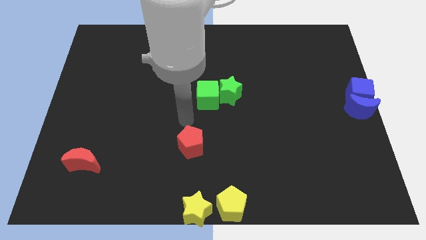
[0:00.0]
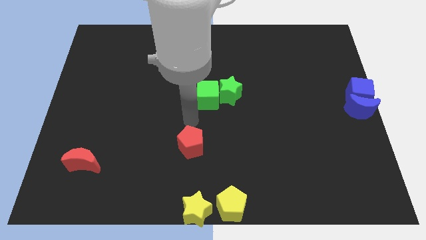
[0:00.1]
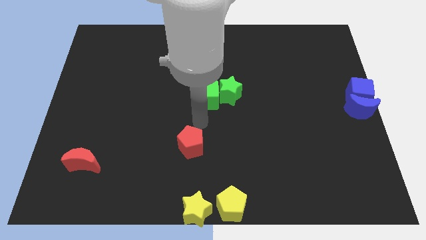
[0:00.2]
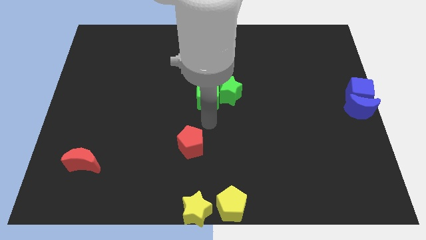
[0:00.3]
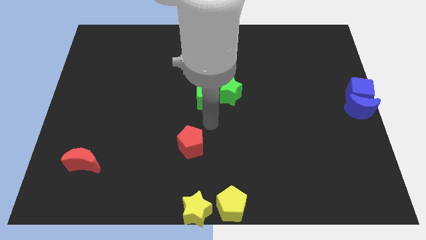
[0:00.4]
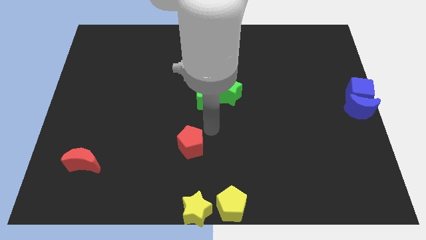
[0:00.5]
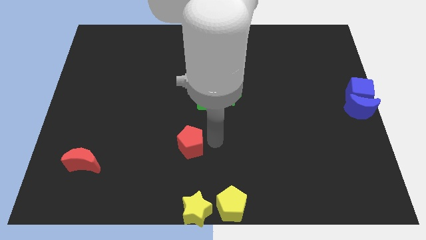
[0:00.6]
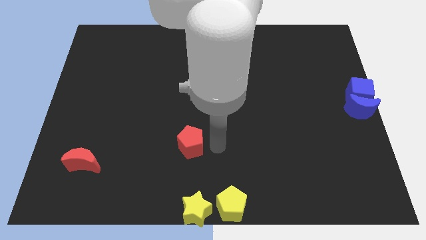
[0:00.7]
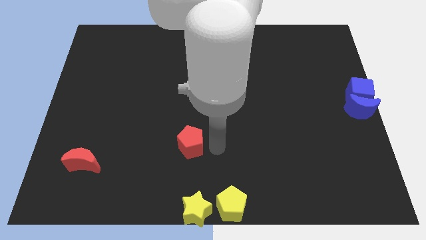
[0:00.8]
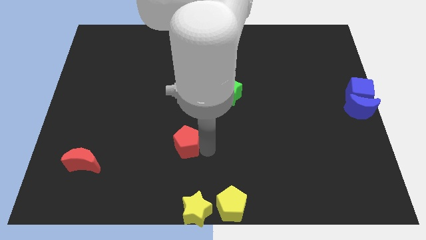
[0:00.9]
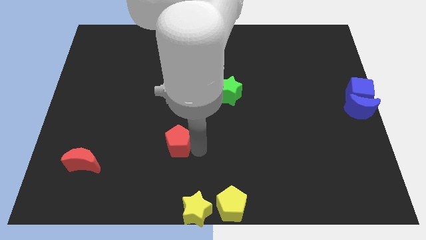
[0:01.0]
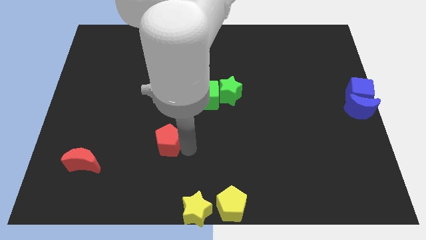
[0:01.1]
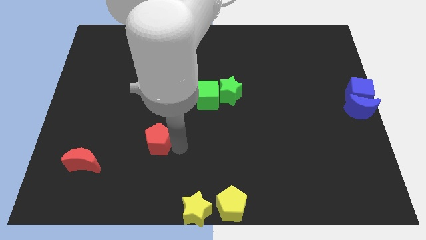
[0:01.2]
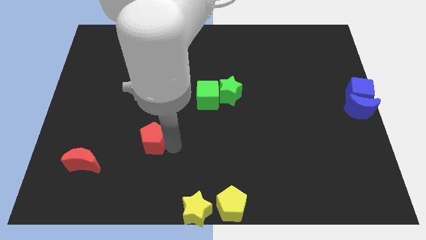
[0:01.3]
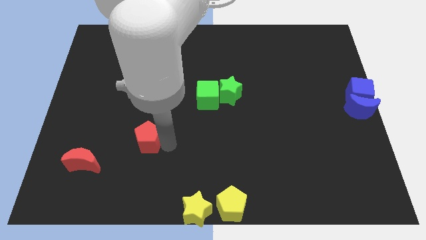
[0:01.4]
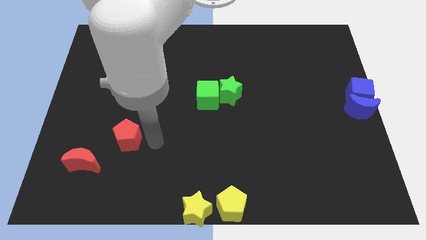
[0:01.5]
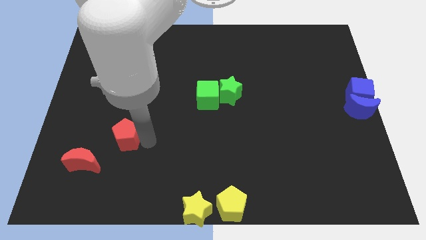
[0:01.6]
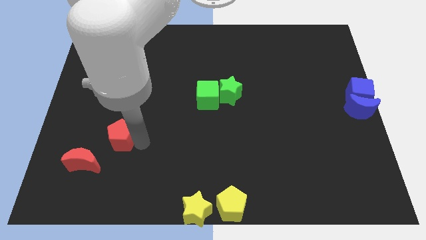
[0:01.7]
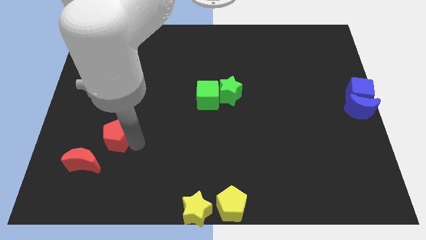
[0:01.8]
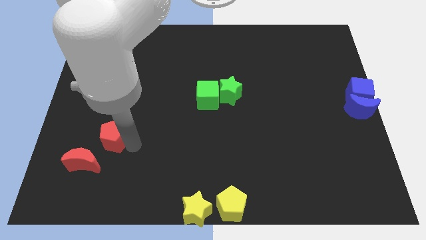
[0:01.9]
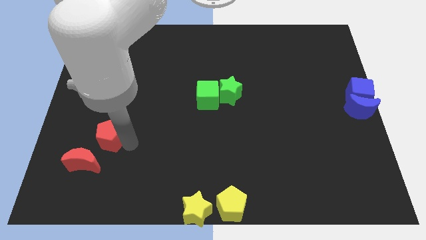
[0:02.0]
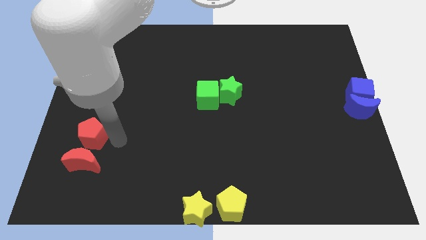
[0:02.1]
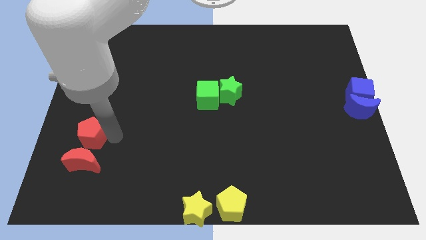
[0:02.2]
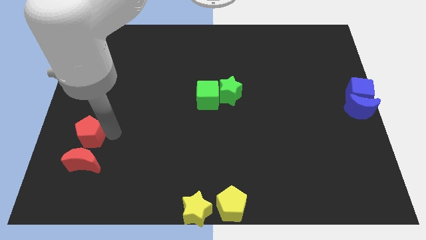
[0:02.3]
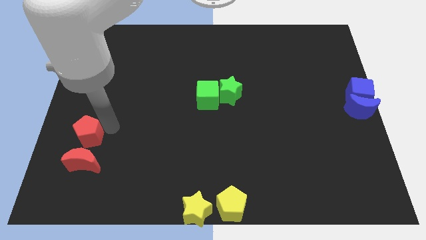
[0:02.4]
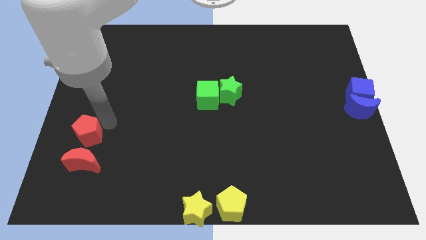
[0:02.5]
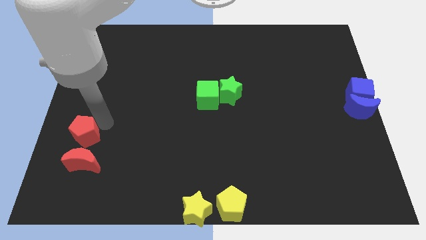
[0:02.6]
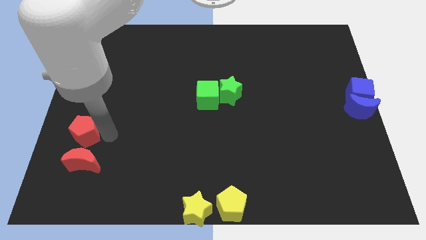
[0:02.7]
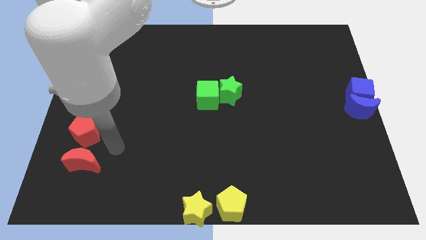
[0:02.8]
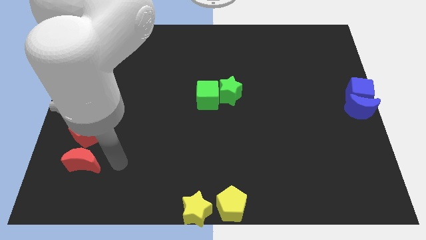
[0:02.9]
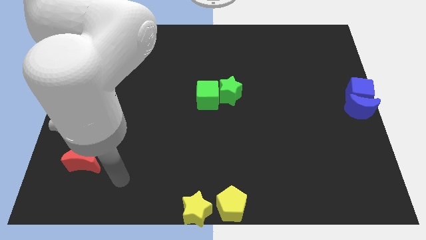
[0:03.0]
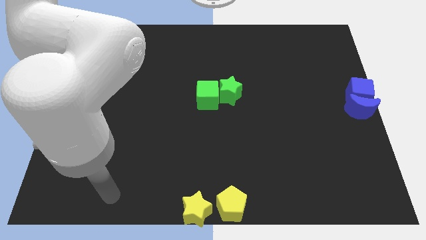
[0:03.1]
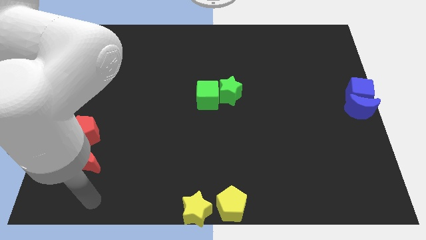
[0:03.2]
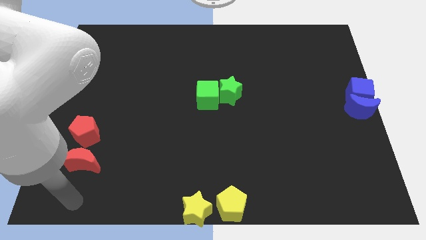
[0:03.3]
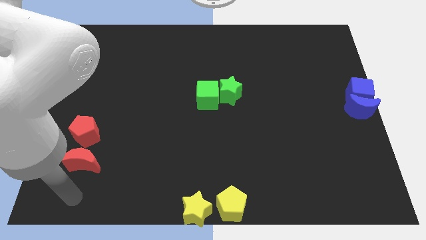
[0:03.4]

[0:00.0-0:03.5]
move red pentagon above the red moon

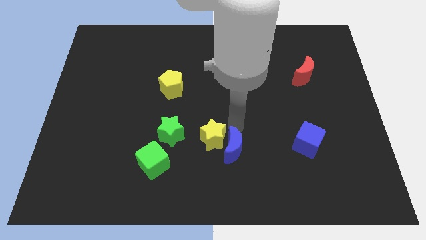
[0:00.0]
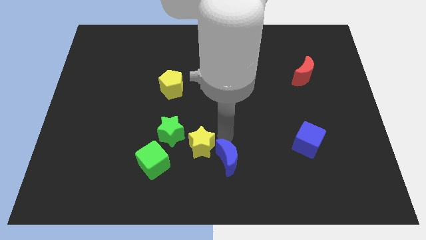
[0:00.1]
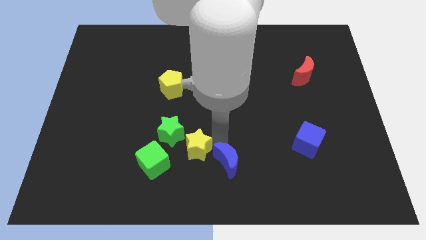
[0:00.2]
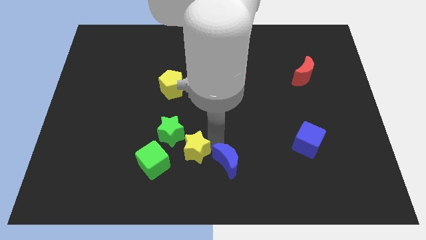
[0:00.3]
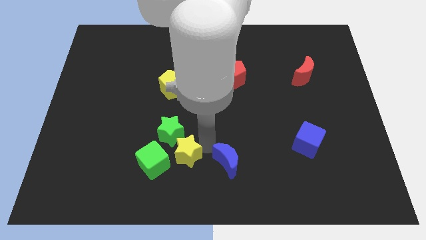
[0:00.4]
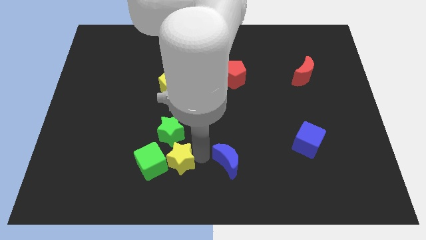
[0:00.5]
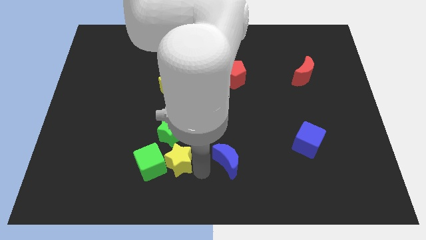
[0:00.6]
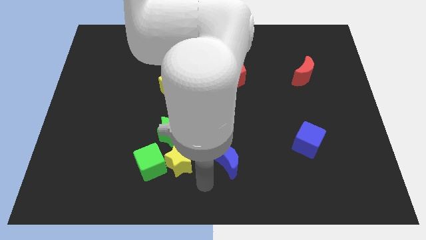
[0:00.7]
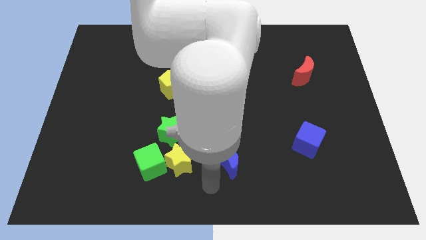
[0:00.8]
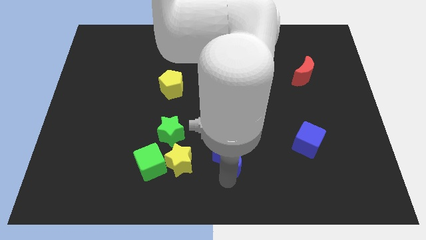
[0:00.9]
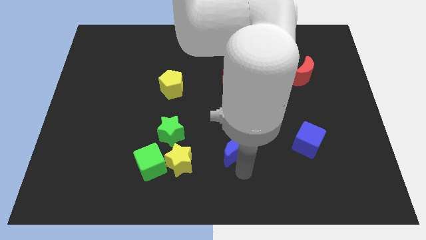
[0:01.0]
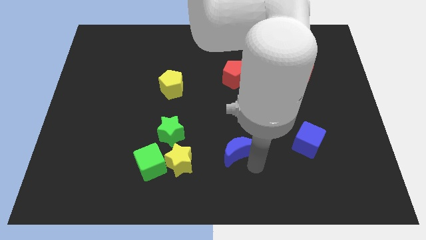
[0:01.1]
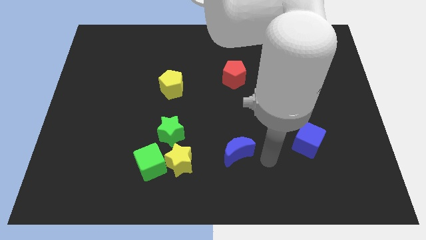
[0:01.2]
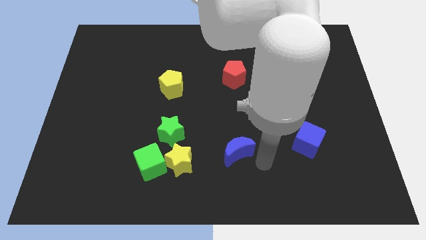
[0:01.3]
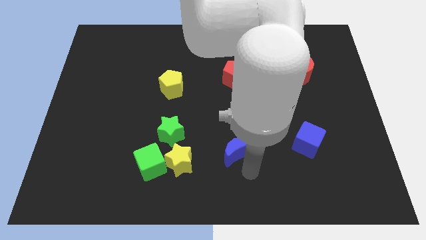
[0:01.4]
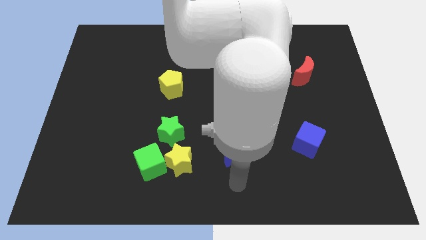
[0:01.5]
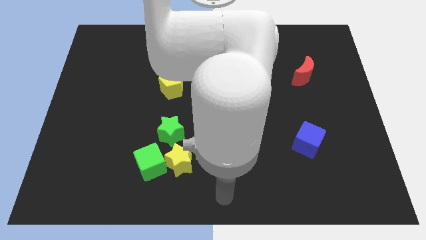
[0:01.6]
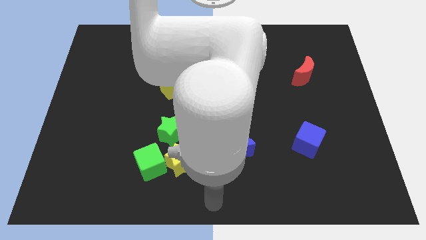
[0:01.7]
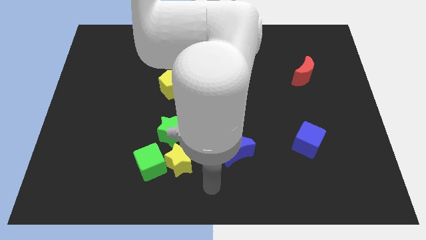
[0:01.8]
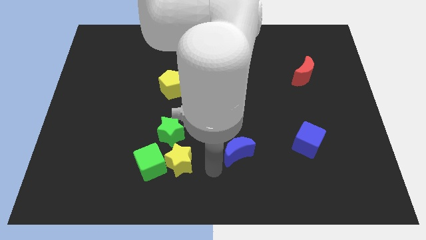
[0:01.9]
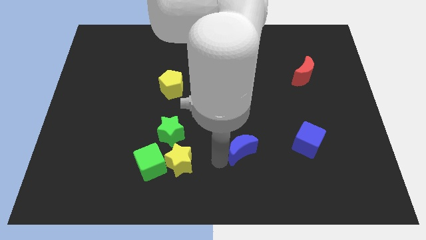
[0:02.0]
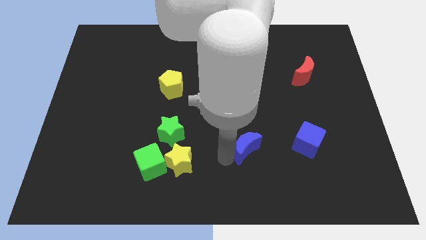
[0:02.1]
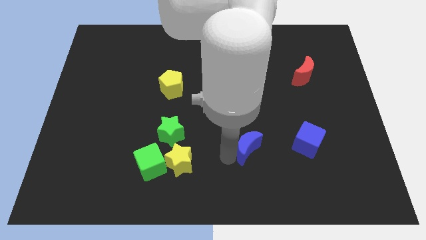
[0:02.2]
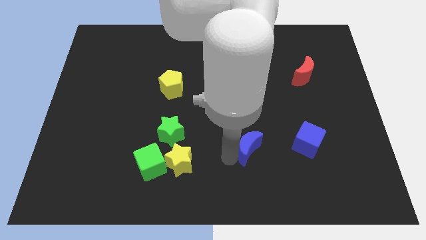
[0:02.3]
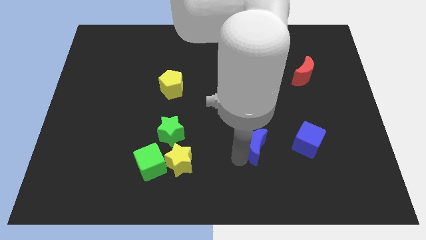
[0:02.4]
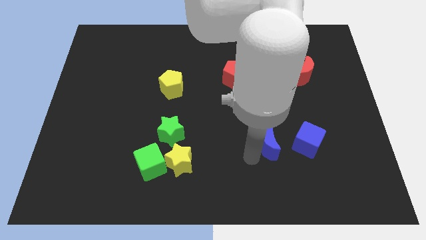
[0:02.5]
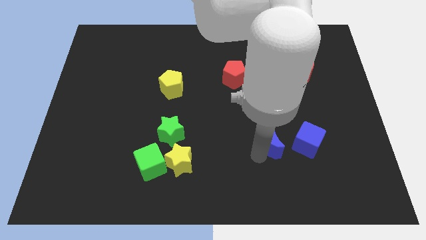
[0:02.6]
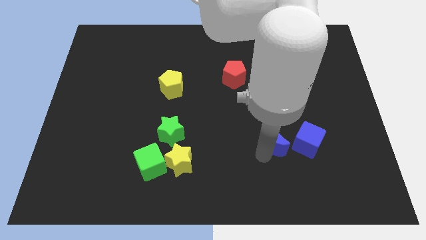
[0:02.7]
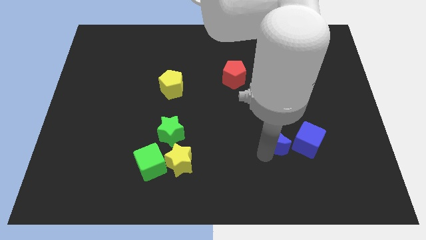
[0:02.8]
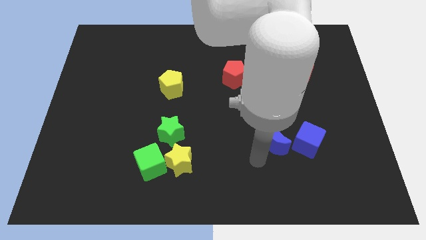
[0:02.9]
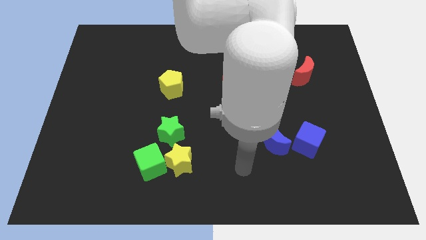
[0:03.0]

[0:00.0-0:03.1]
place blue crescent beside blue cube

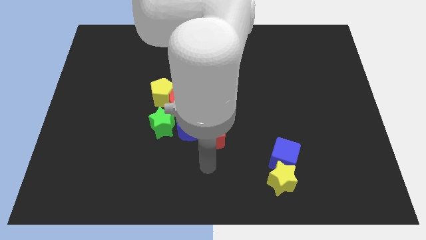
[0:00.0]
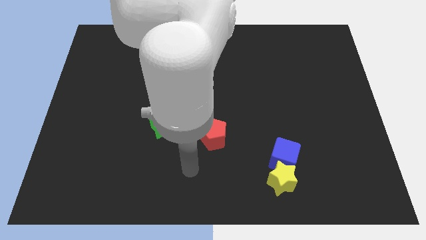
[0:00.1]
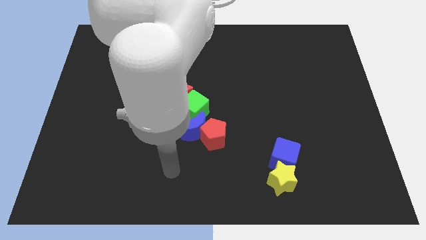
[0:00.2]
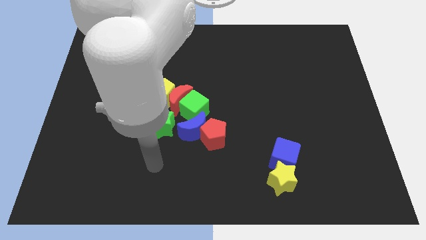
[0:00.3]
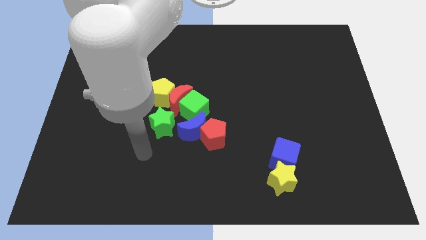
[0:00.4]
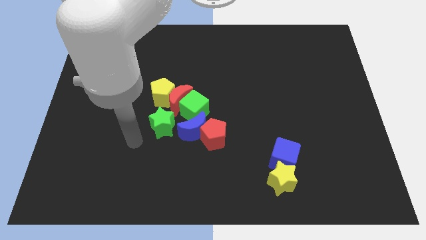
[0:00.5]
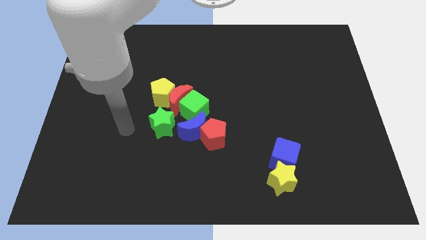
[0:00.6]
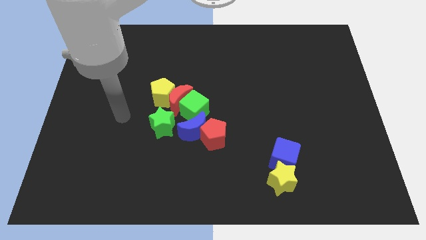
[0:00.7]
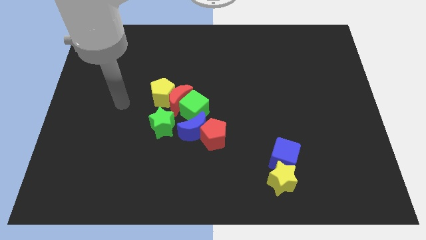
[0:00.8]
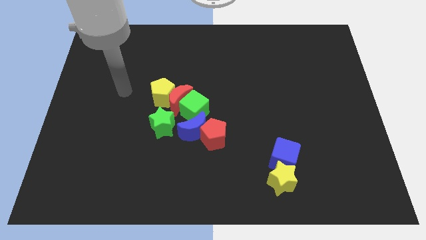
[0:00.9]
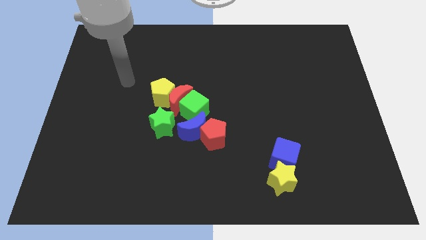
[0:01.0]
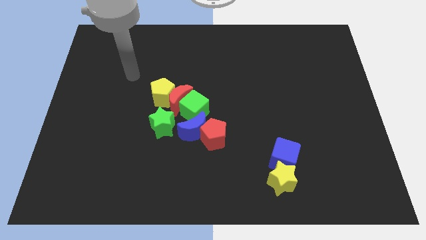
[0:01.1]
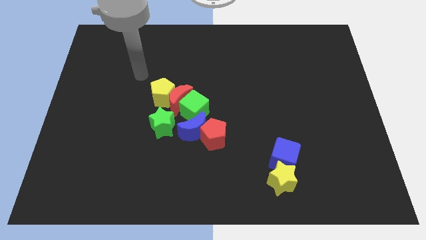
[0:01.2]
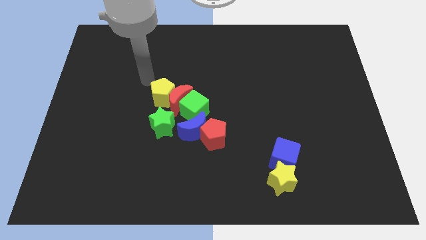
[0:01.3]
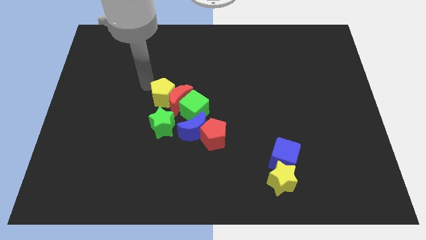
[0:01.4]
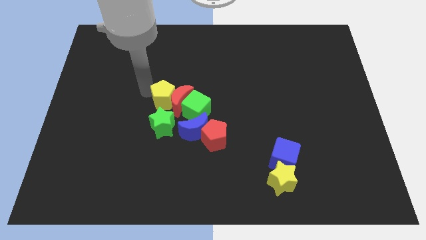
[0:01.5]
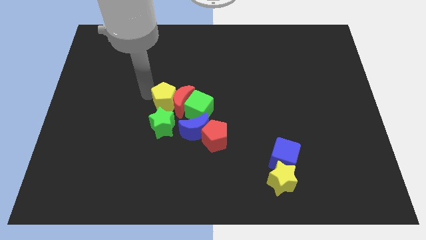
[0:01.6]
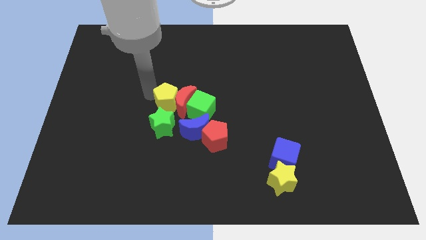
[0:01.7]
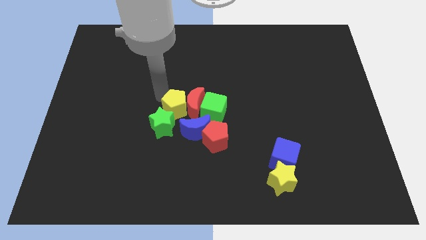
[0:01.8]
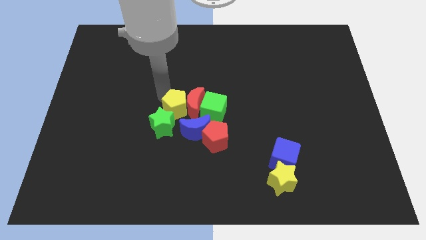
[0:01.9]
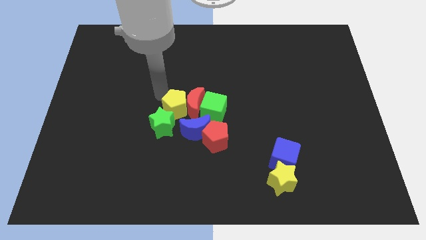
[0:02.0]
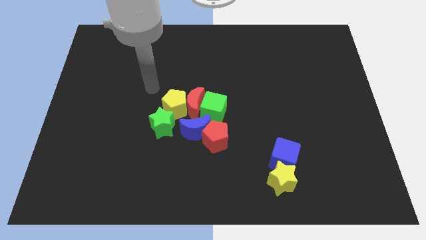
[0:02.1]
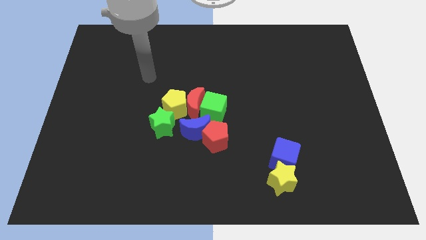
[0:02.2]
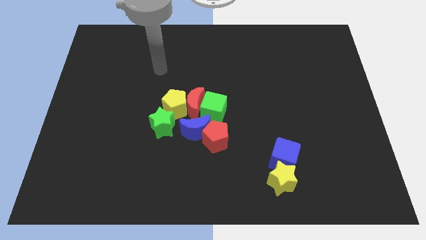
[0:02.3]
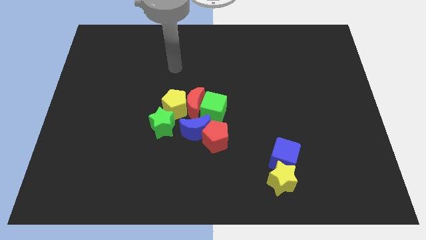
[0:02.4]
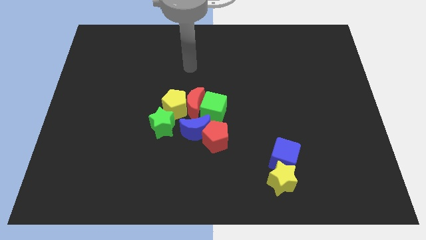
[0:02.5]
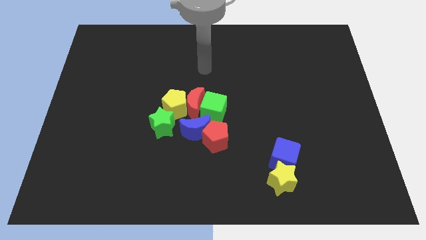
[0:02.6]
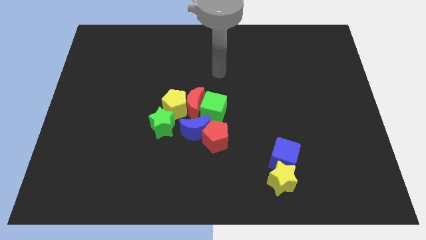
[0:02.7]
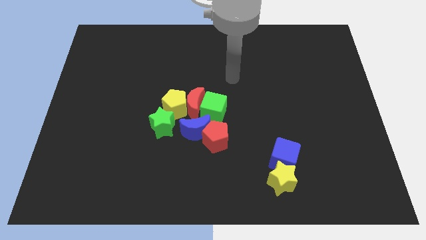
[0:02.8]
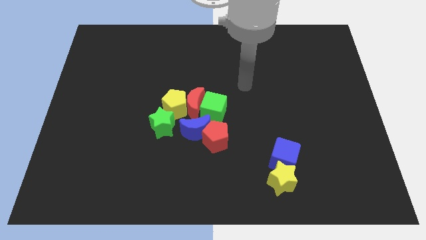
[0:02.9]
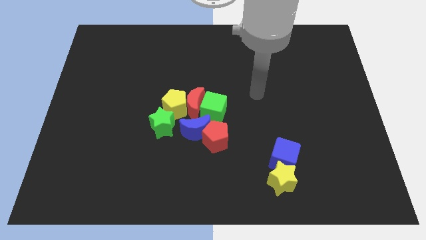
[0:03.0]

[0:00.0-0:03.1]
push yellow pentagon in between red moon and green star
